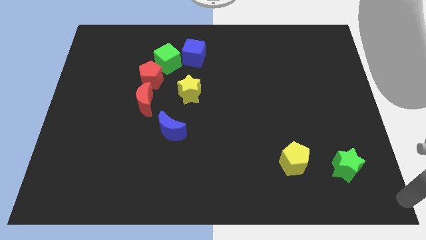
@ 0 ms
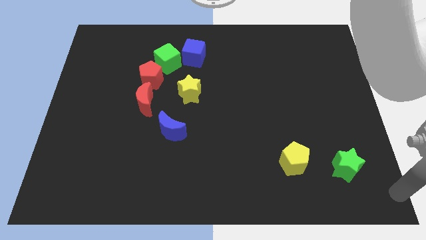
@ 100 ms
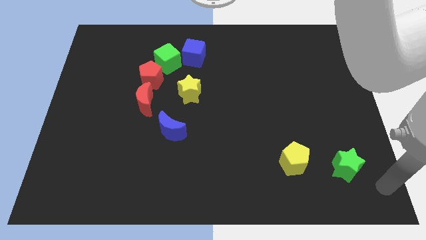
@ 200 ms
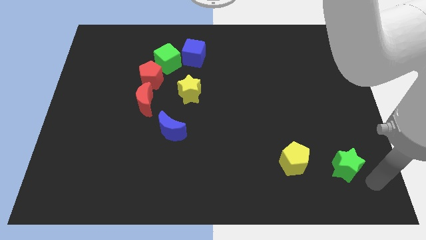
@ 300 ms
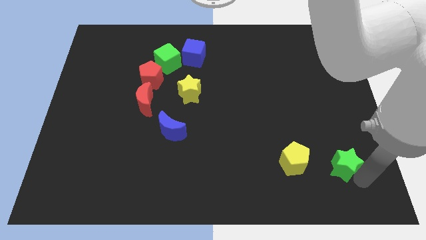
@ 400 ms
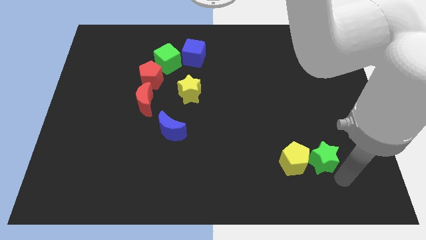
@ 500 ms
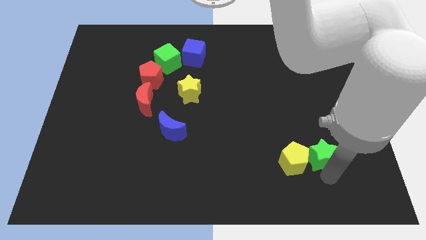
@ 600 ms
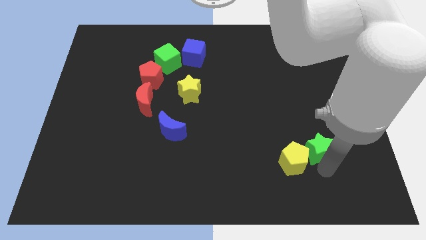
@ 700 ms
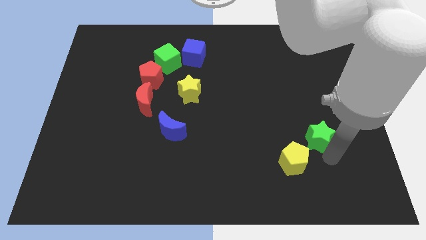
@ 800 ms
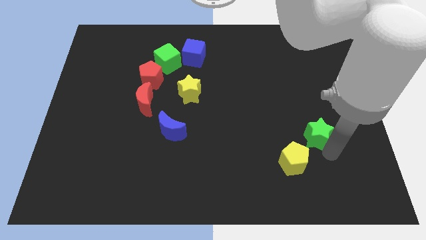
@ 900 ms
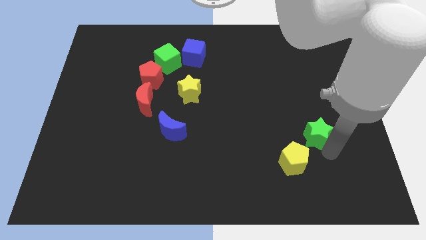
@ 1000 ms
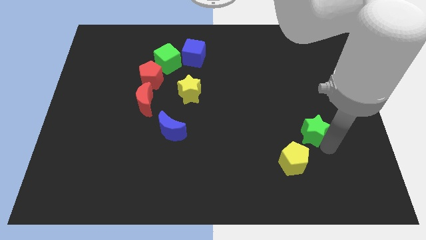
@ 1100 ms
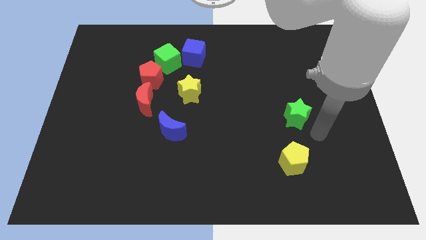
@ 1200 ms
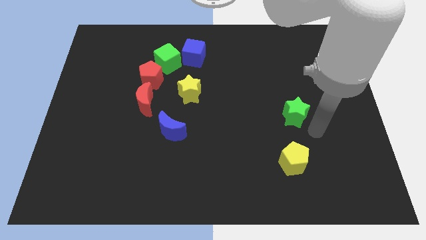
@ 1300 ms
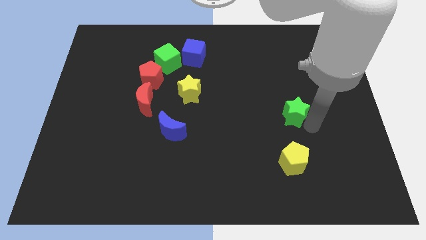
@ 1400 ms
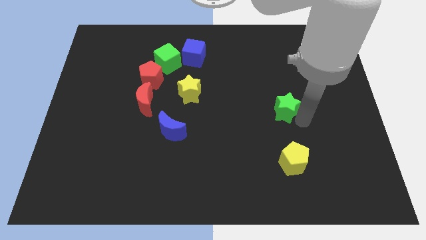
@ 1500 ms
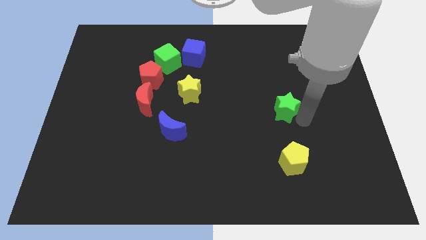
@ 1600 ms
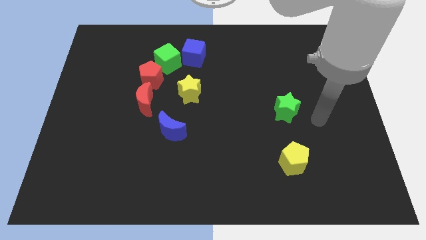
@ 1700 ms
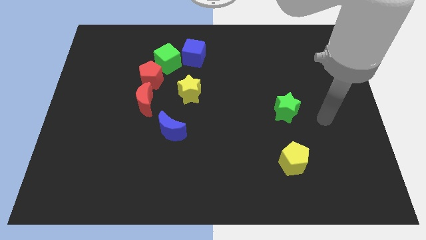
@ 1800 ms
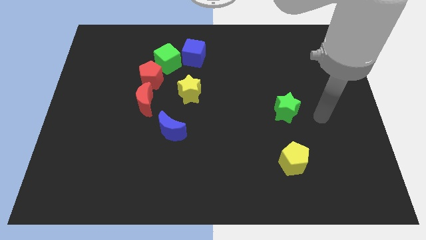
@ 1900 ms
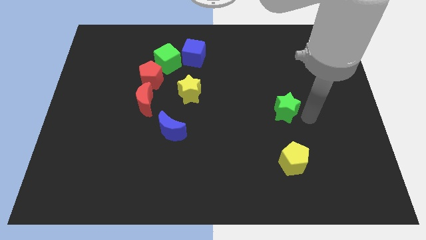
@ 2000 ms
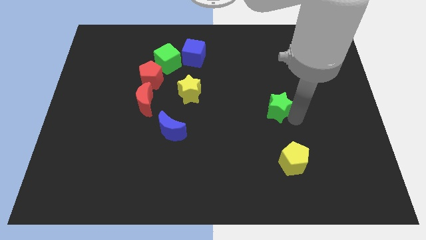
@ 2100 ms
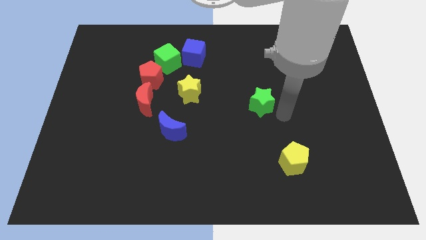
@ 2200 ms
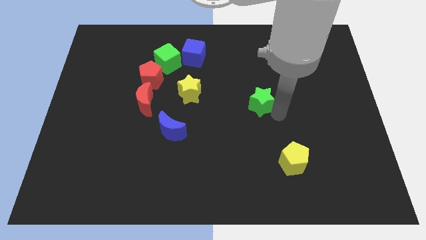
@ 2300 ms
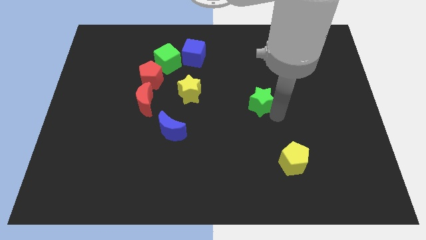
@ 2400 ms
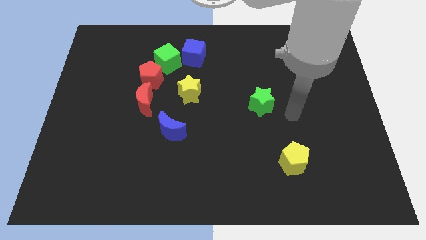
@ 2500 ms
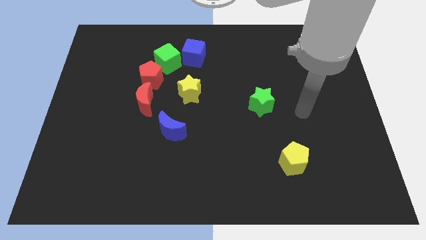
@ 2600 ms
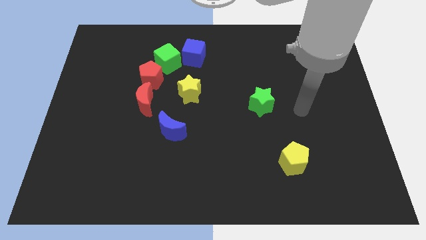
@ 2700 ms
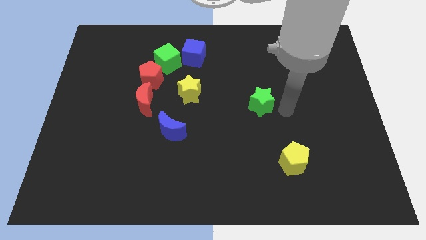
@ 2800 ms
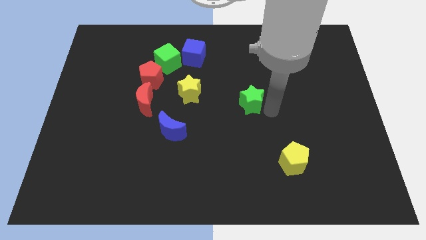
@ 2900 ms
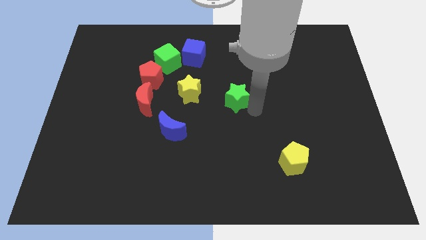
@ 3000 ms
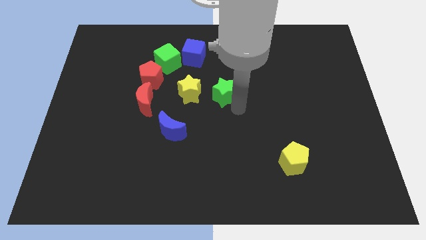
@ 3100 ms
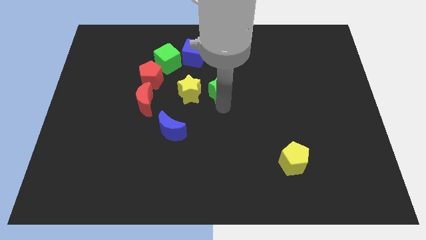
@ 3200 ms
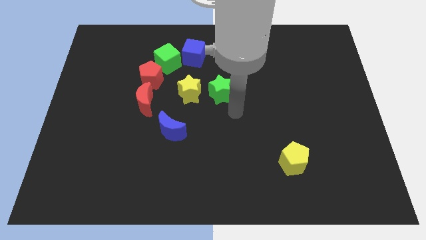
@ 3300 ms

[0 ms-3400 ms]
push green star beside yellow star

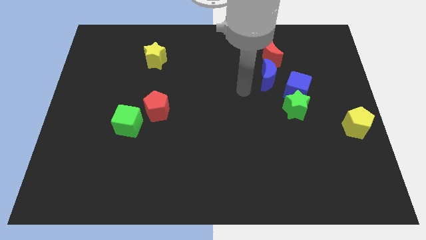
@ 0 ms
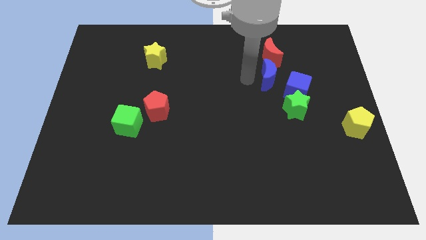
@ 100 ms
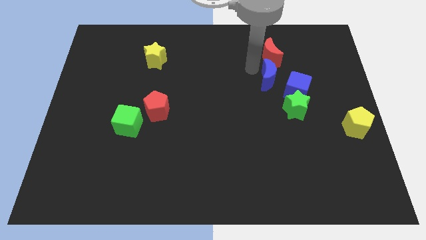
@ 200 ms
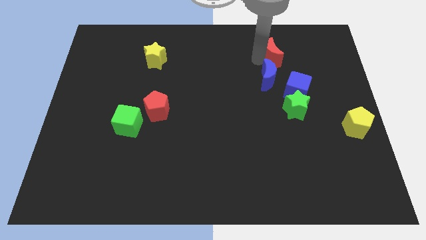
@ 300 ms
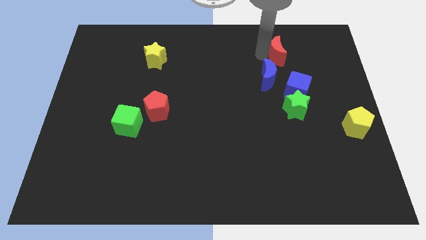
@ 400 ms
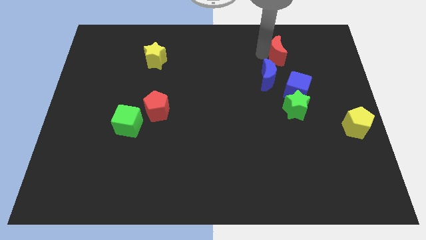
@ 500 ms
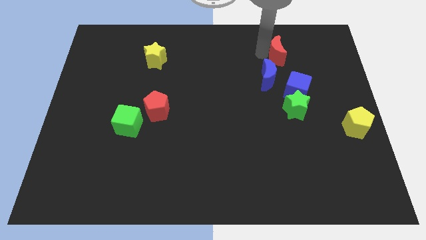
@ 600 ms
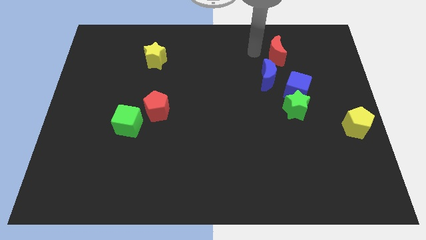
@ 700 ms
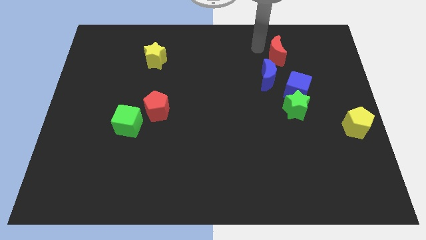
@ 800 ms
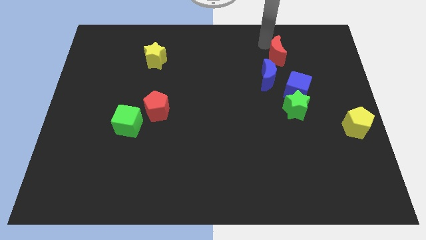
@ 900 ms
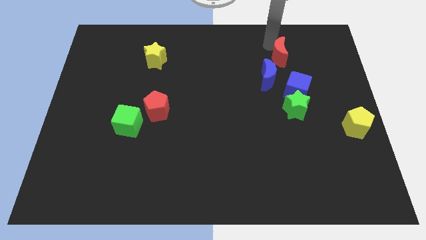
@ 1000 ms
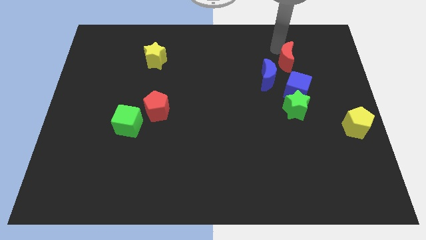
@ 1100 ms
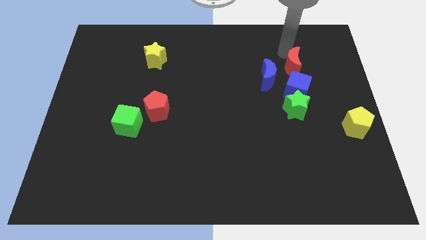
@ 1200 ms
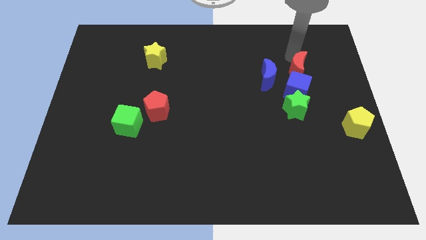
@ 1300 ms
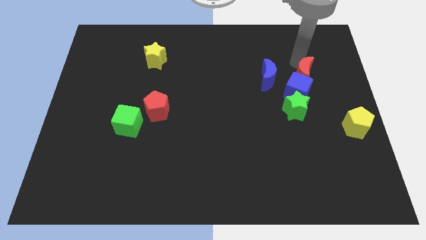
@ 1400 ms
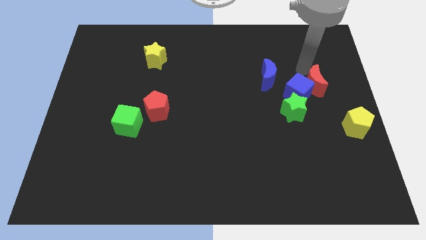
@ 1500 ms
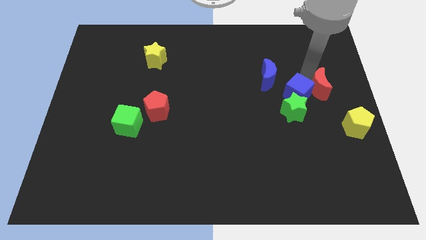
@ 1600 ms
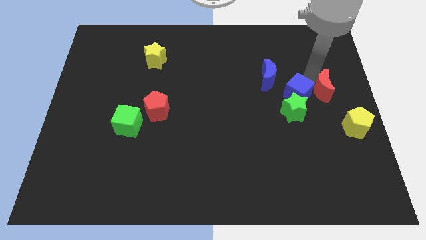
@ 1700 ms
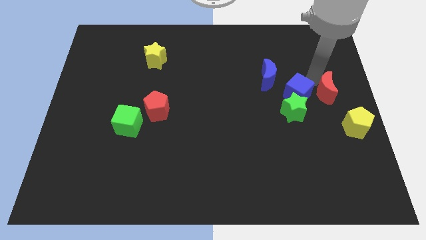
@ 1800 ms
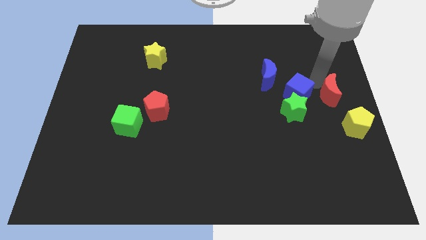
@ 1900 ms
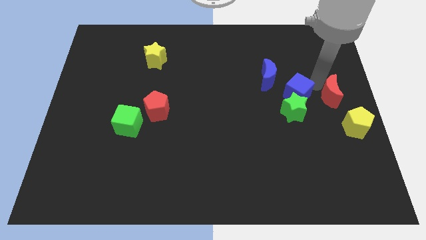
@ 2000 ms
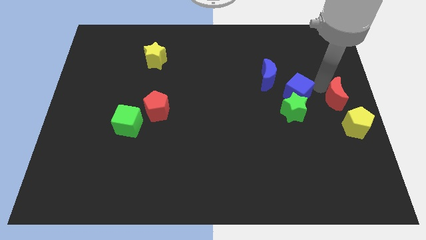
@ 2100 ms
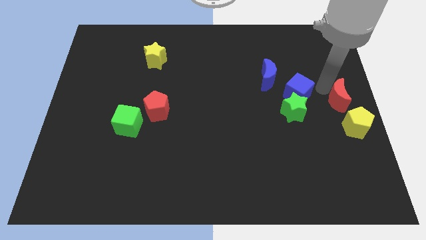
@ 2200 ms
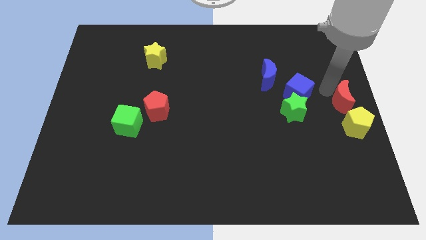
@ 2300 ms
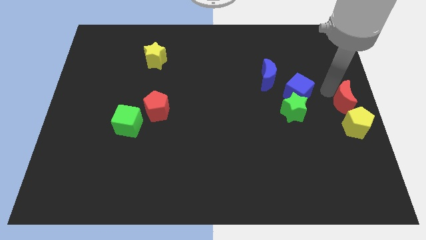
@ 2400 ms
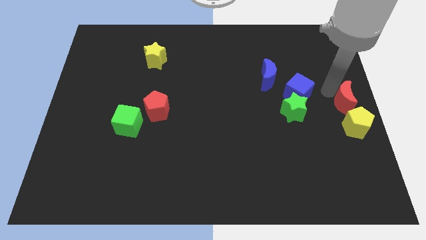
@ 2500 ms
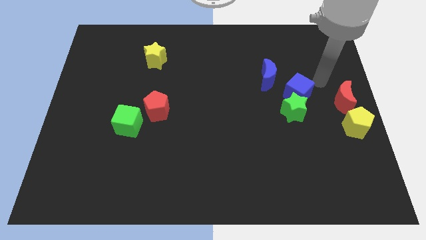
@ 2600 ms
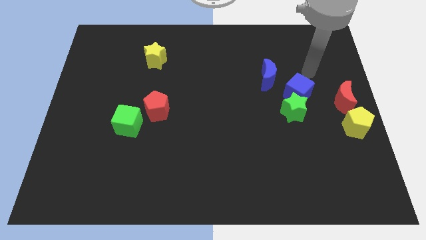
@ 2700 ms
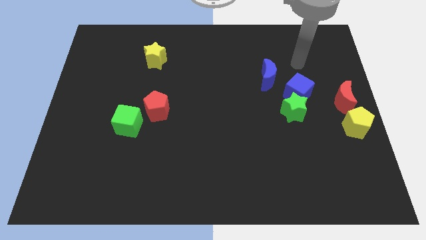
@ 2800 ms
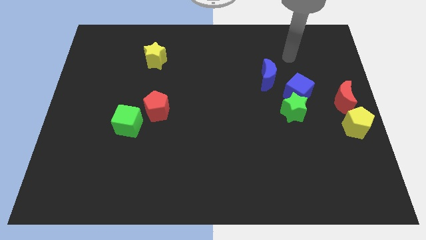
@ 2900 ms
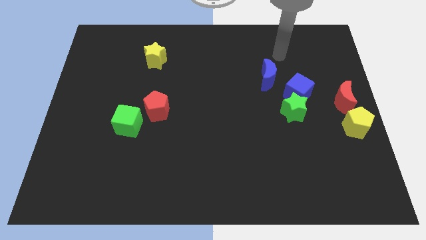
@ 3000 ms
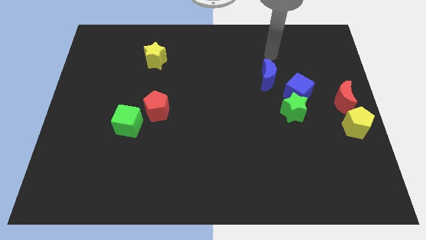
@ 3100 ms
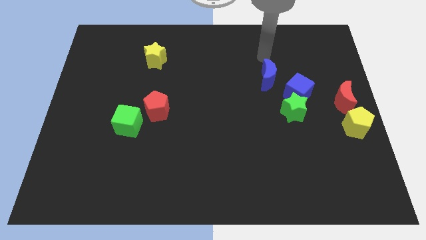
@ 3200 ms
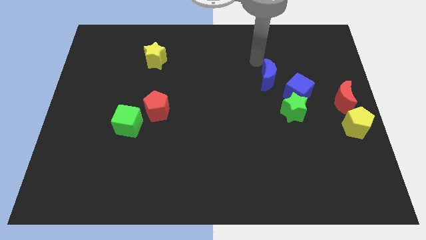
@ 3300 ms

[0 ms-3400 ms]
place the red crescent above the yellow pentagon

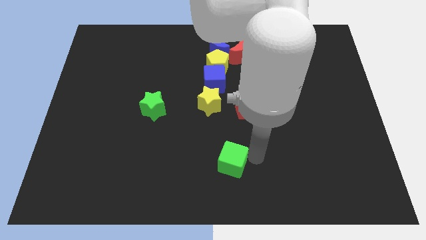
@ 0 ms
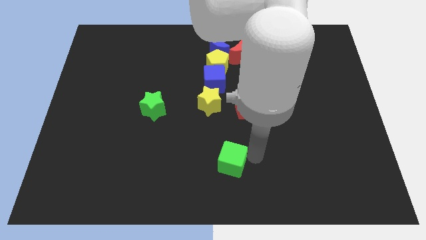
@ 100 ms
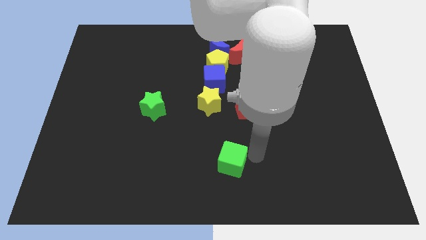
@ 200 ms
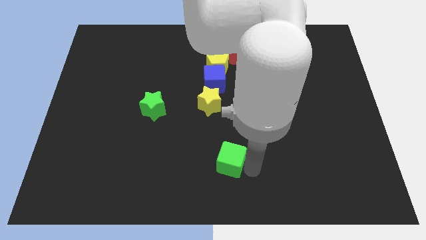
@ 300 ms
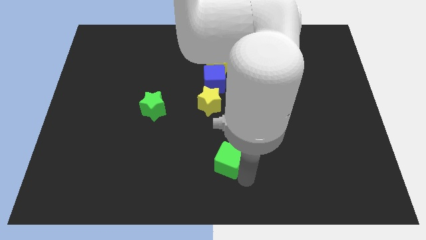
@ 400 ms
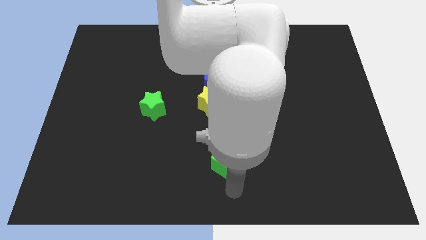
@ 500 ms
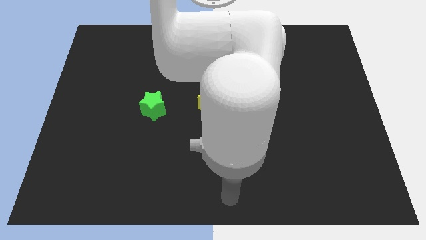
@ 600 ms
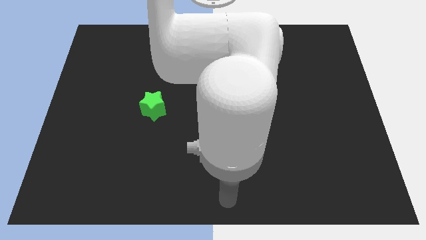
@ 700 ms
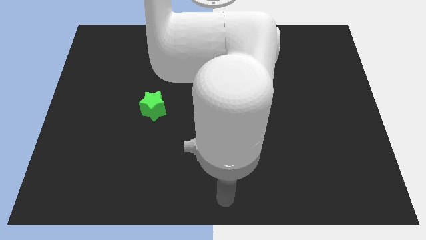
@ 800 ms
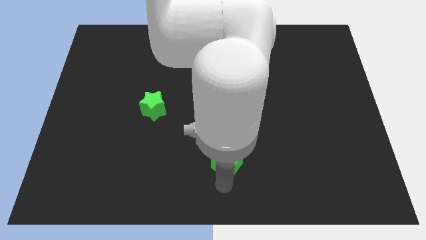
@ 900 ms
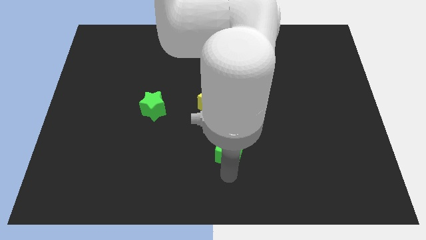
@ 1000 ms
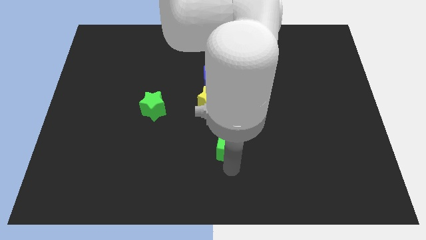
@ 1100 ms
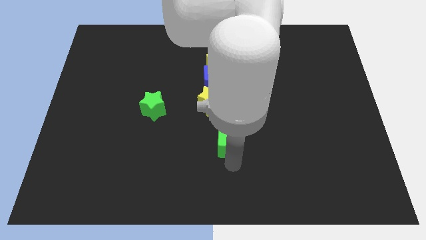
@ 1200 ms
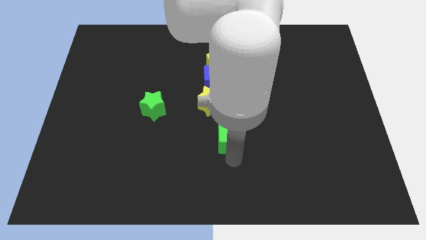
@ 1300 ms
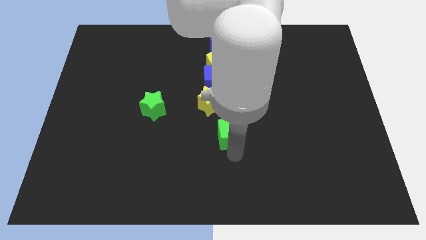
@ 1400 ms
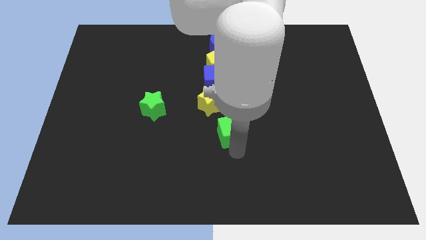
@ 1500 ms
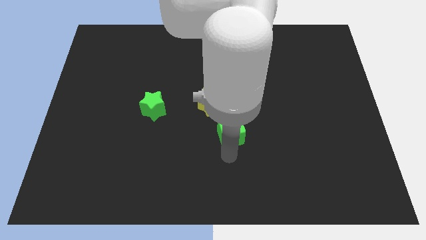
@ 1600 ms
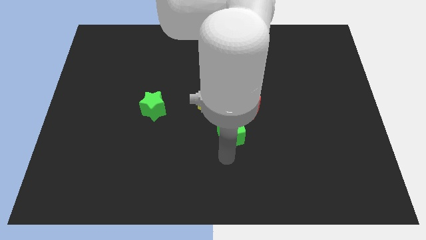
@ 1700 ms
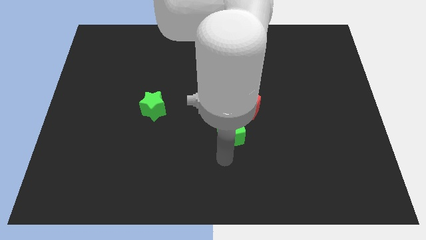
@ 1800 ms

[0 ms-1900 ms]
move the green cube below yellow star and red pentagon

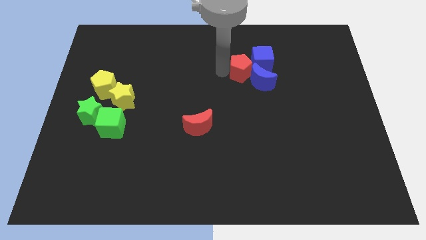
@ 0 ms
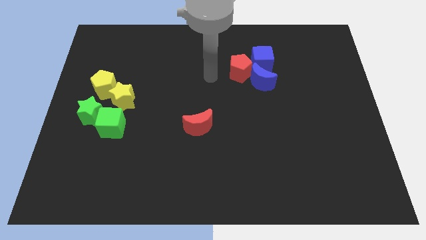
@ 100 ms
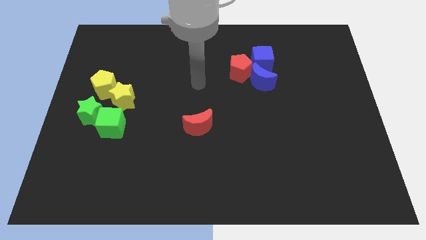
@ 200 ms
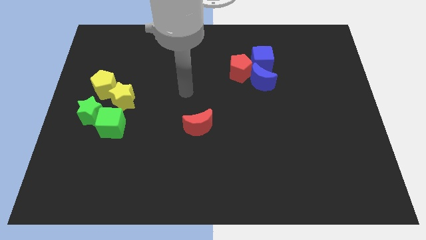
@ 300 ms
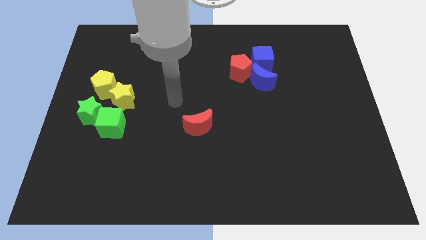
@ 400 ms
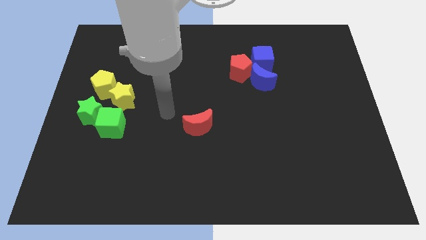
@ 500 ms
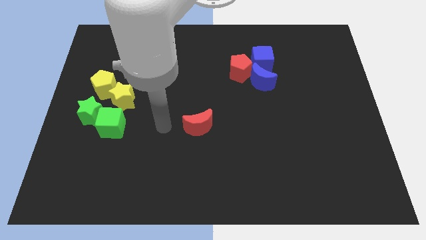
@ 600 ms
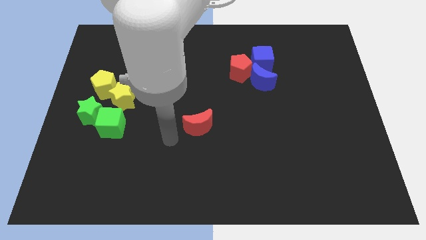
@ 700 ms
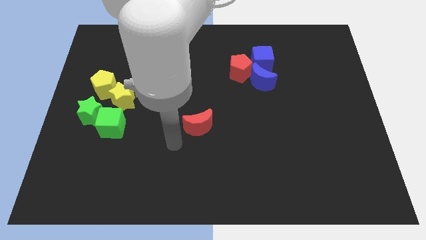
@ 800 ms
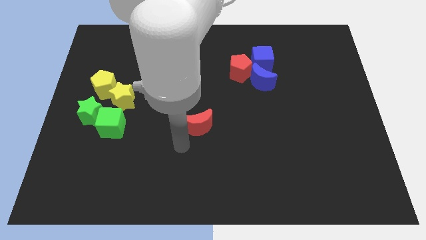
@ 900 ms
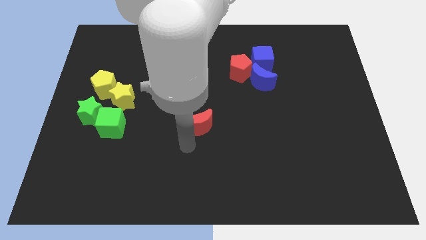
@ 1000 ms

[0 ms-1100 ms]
move your arm away from the red pentagon
